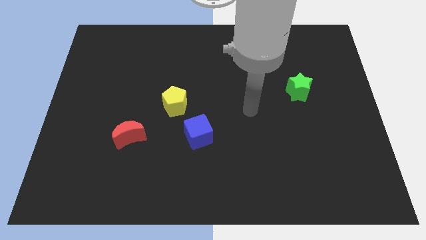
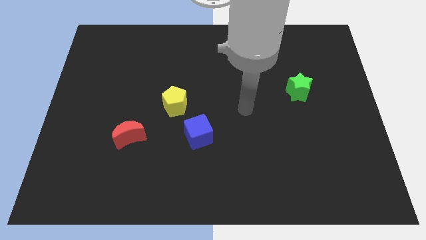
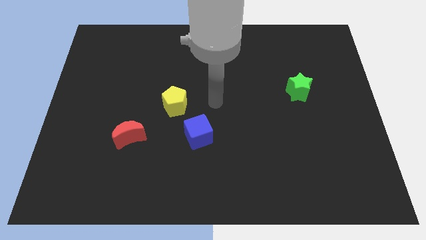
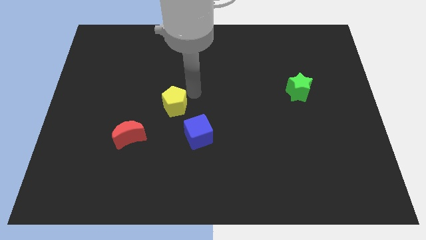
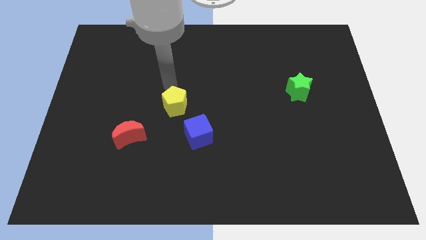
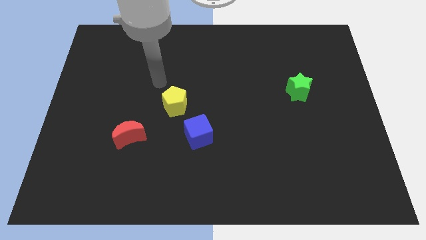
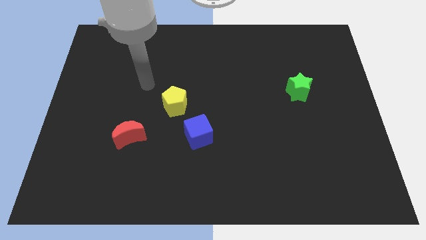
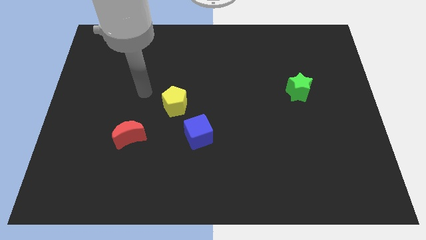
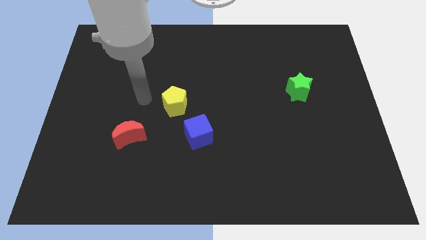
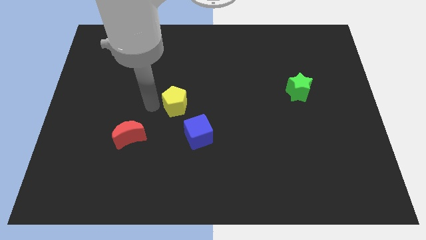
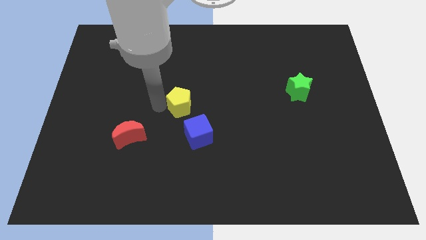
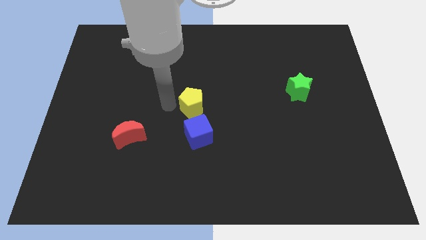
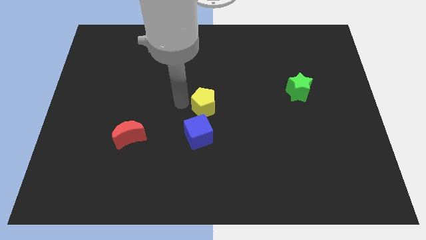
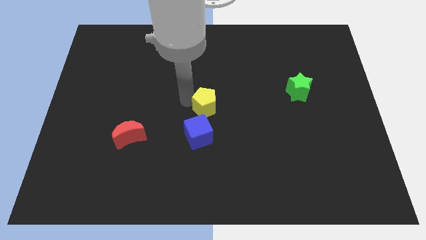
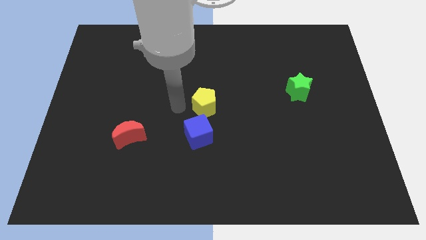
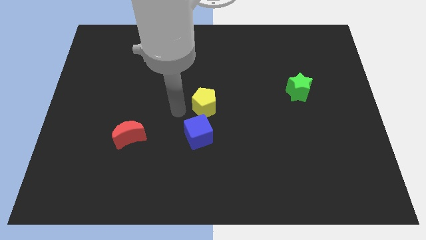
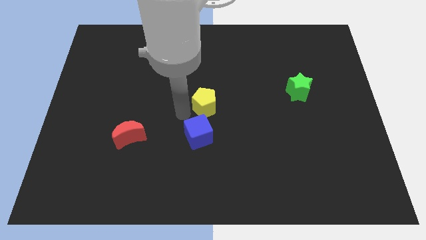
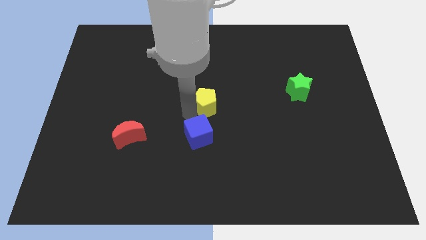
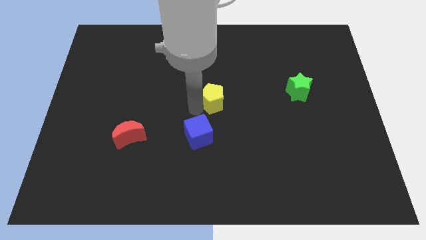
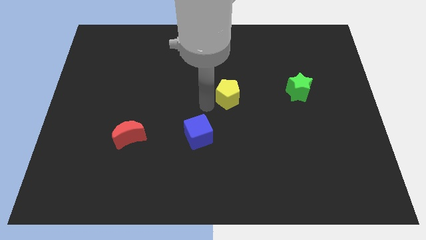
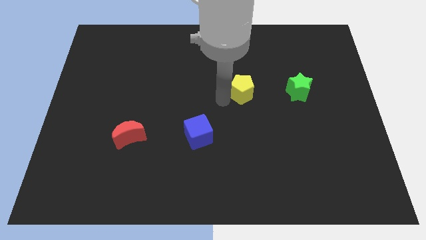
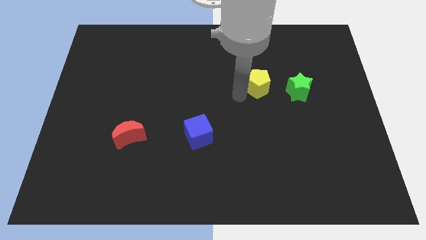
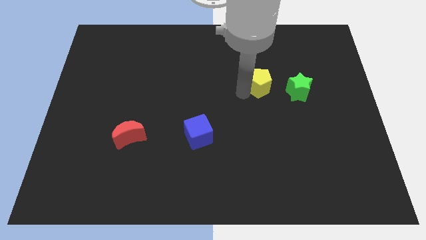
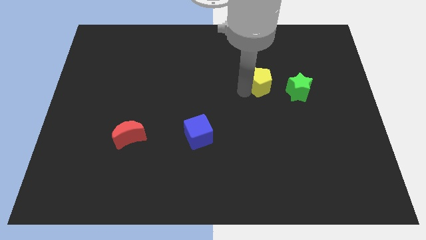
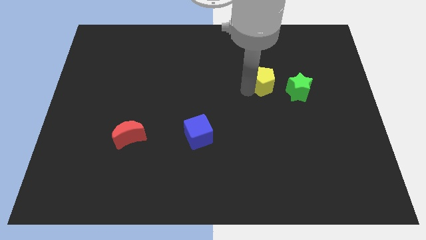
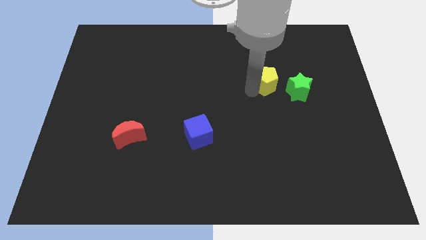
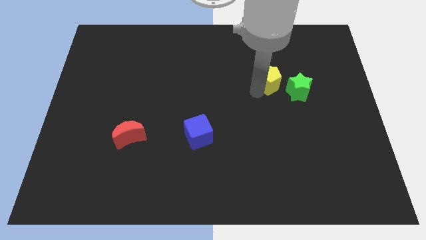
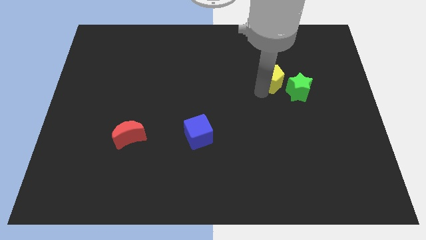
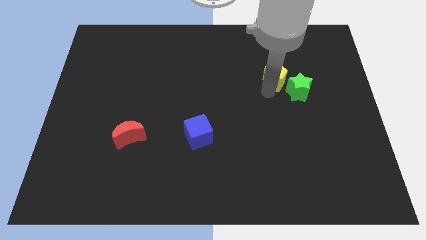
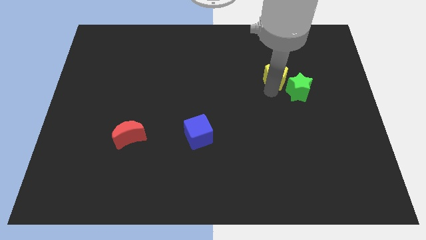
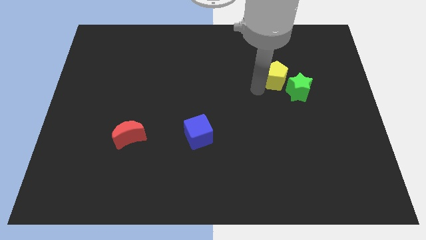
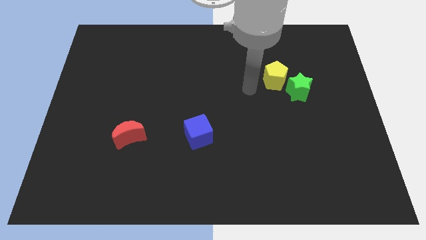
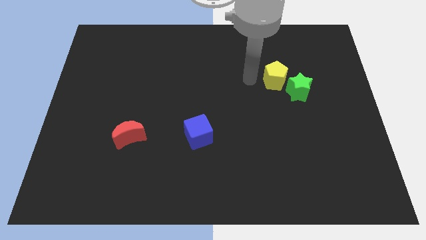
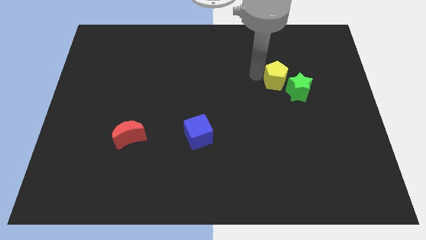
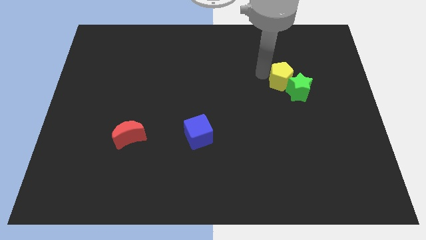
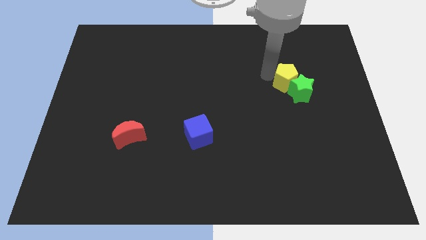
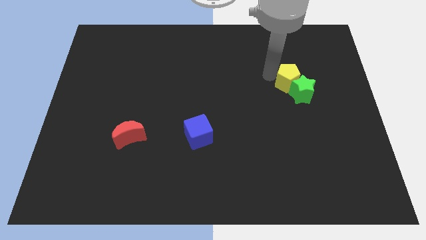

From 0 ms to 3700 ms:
put the pentagon towards the green star

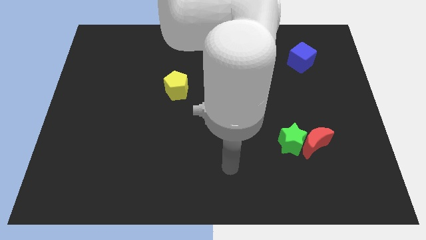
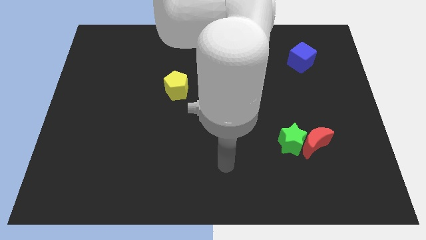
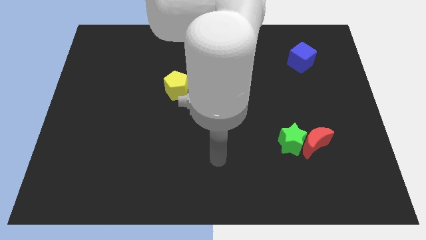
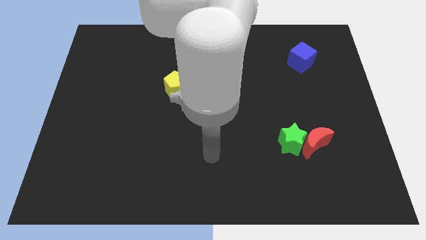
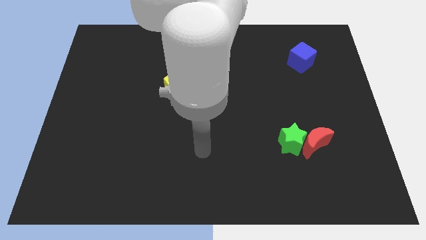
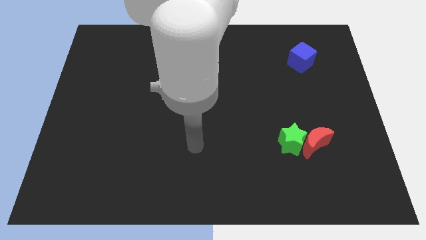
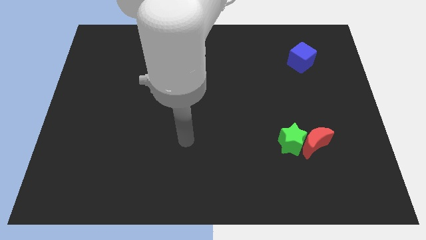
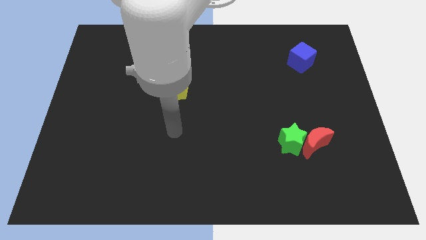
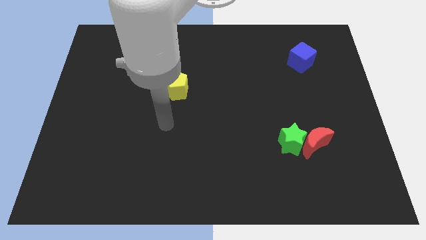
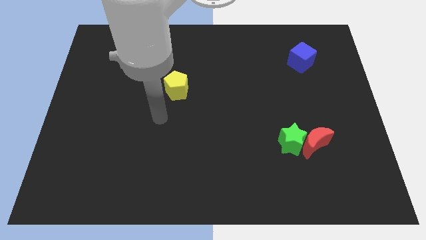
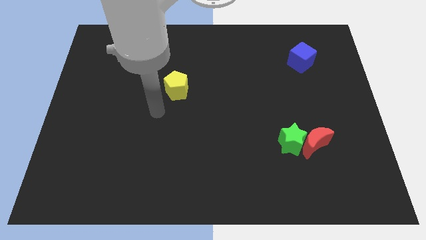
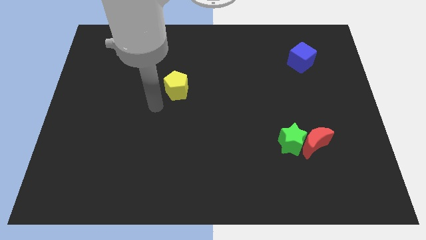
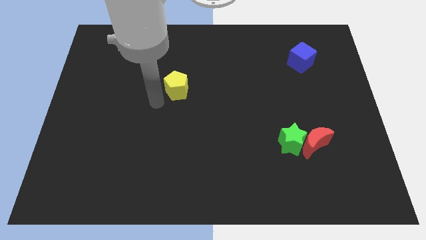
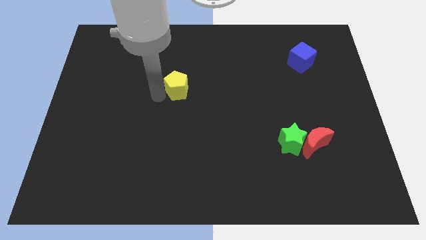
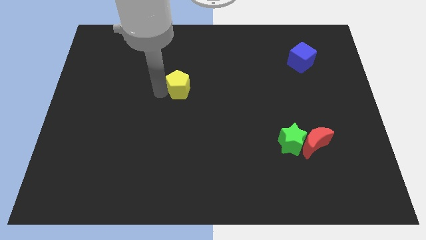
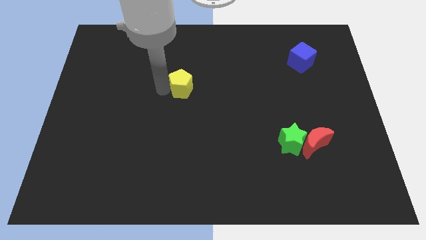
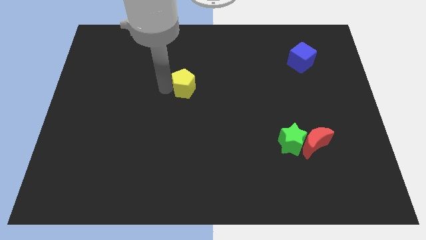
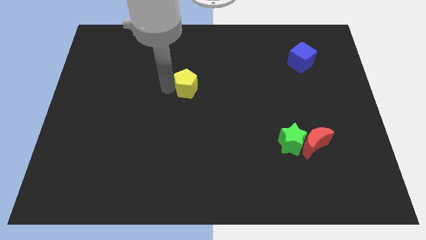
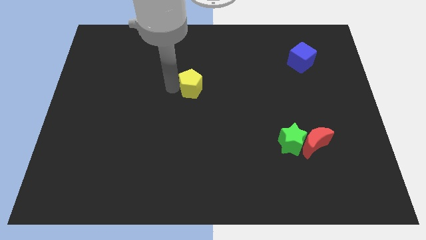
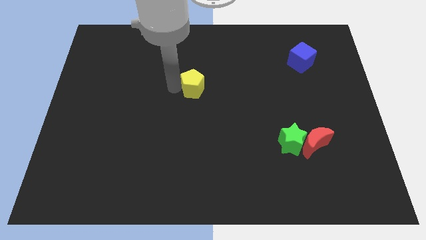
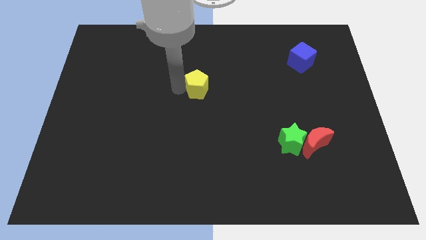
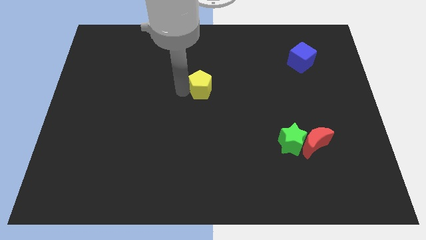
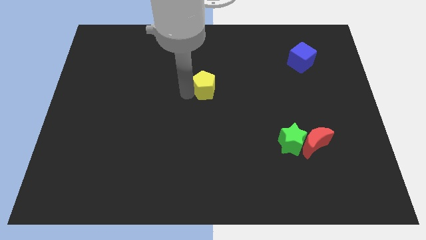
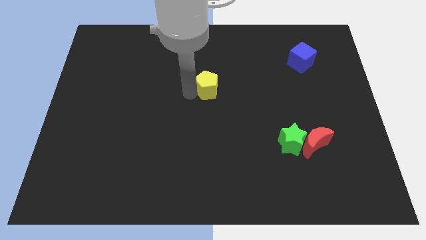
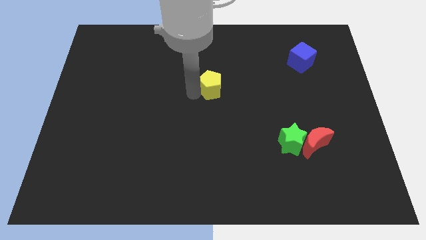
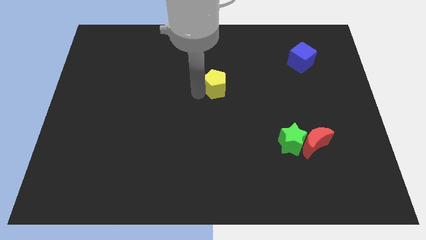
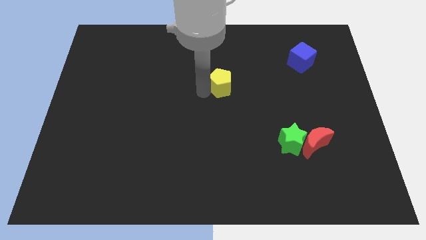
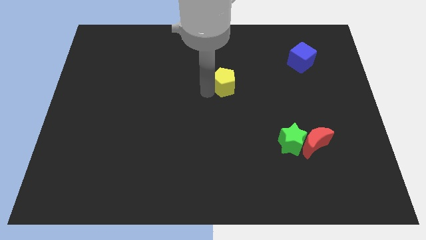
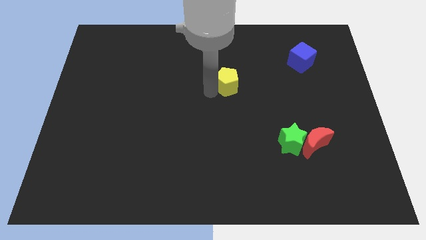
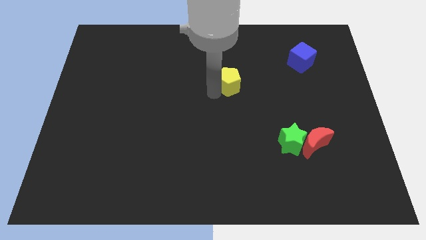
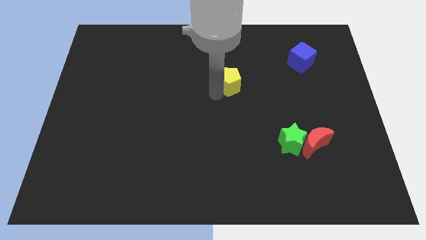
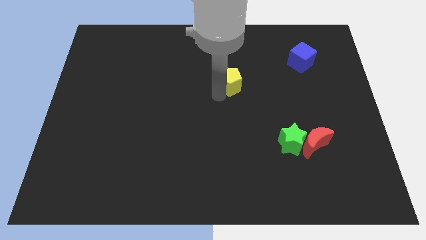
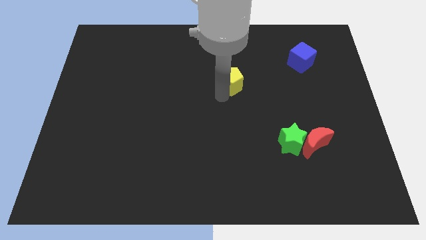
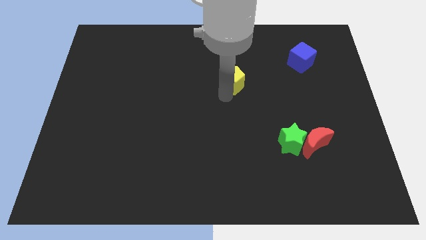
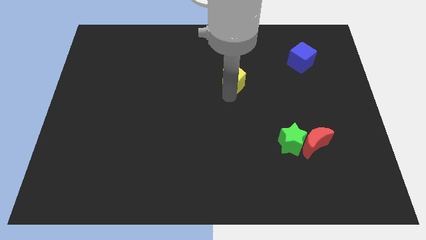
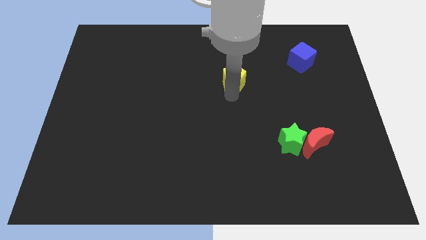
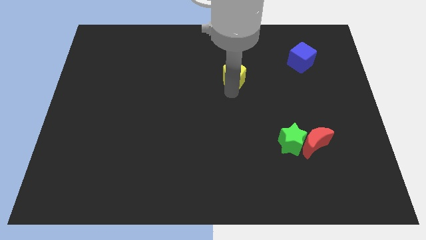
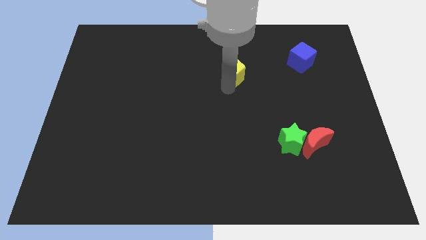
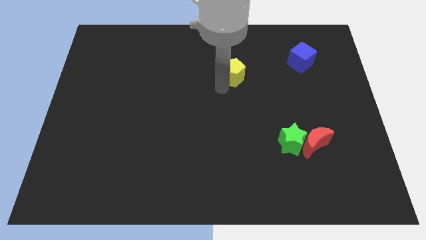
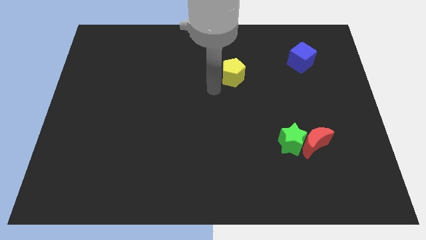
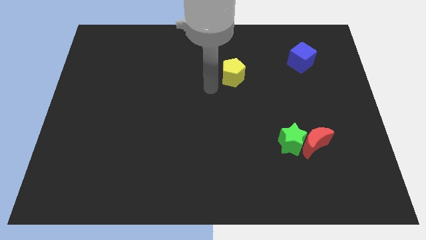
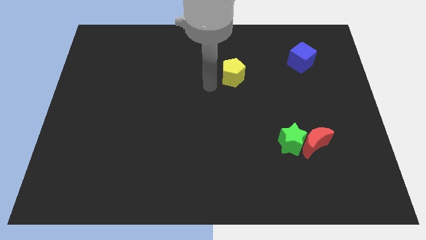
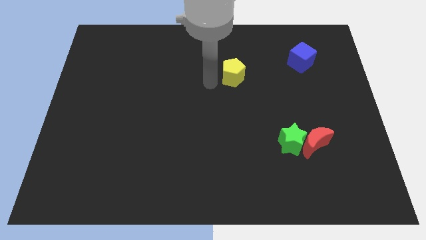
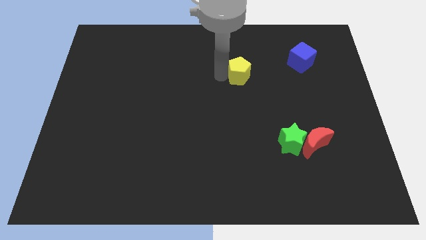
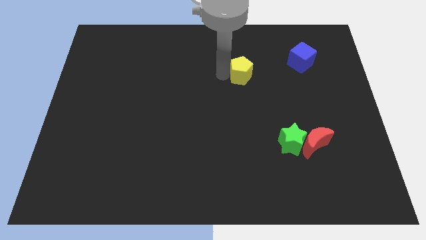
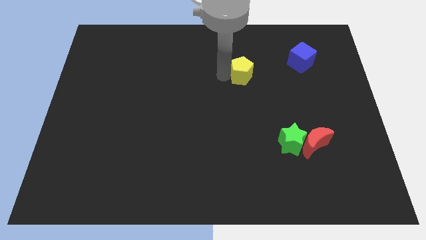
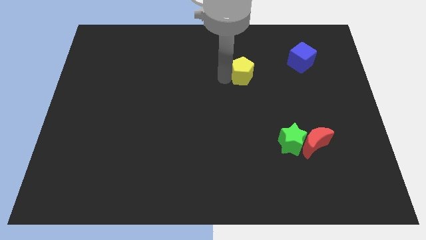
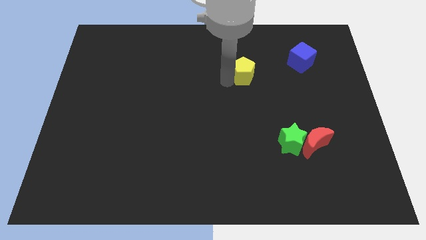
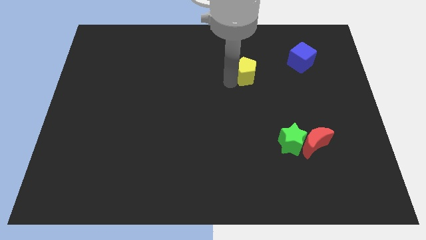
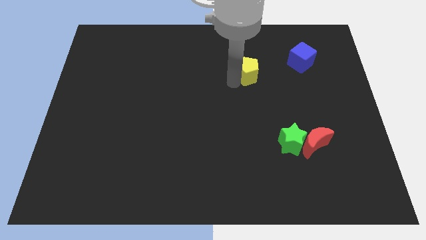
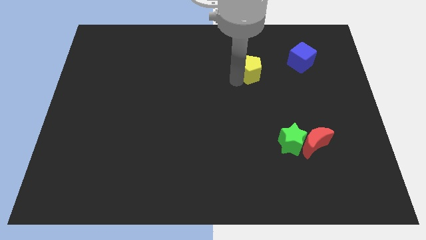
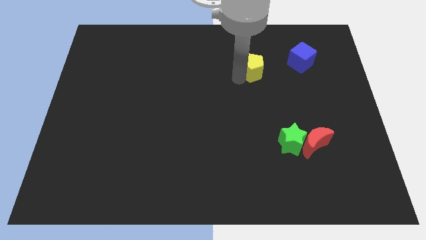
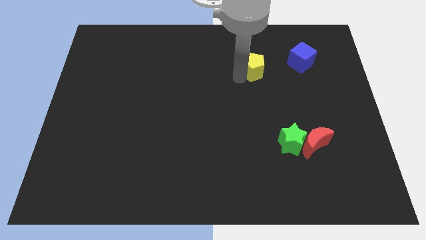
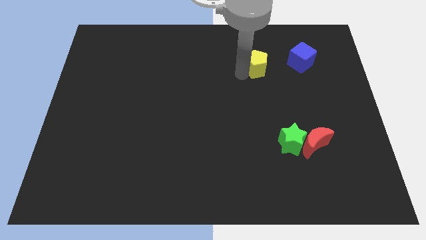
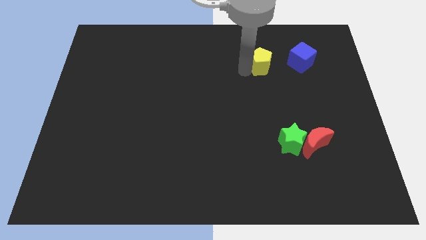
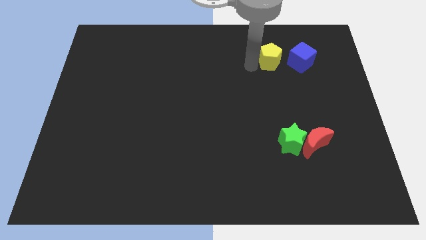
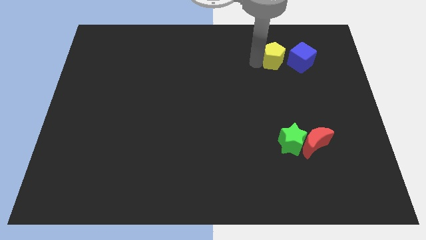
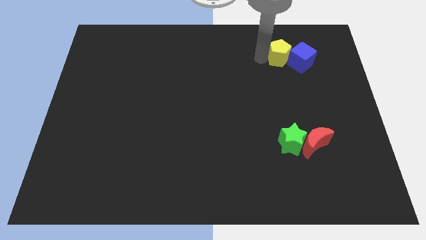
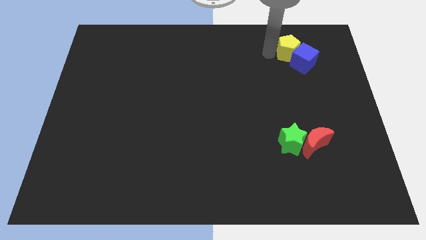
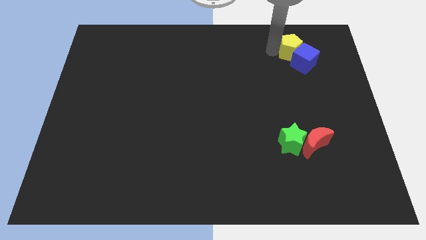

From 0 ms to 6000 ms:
move the yellow block close to the blue cube
